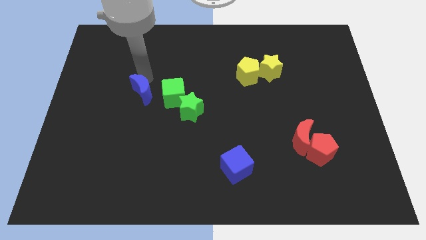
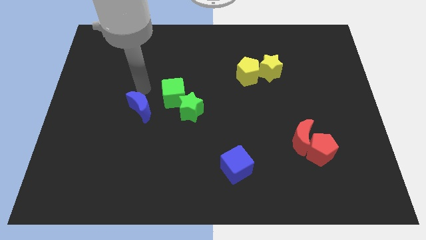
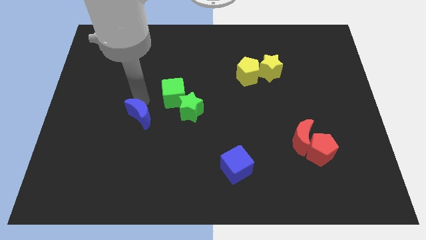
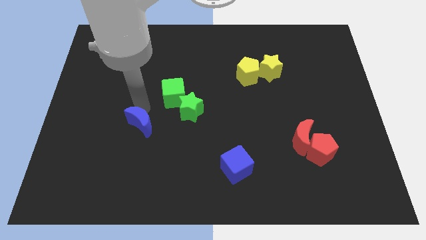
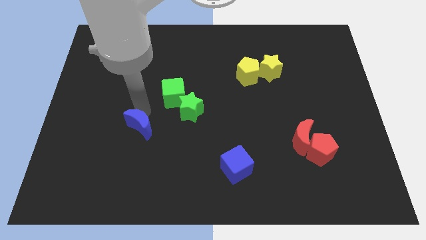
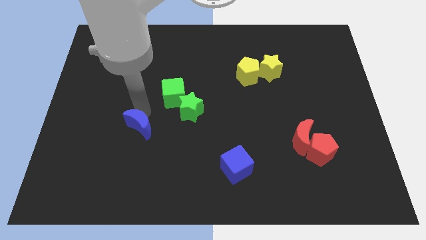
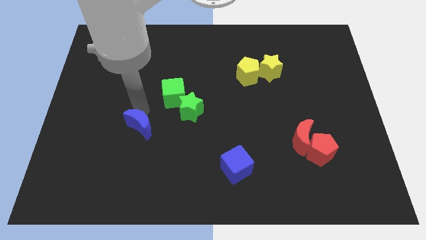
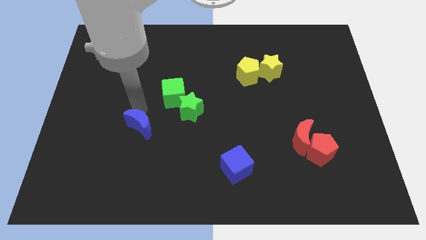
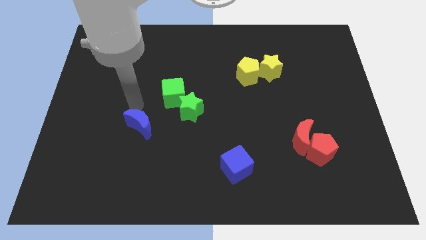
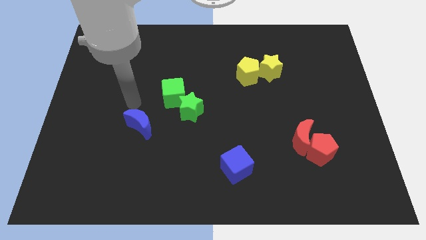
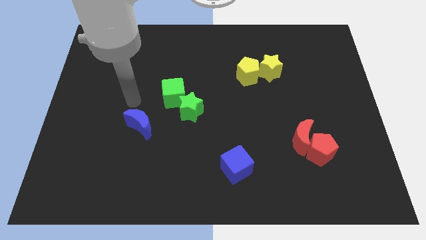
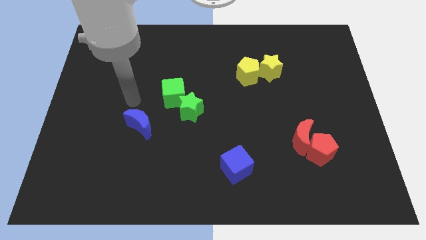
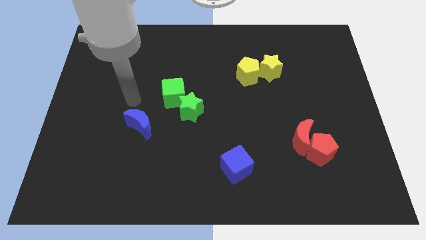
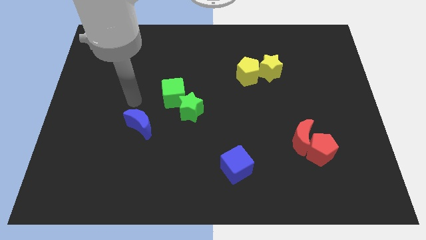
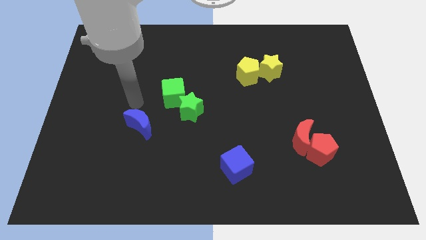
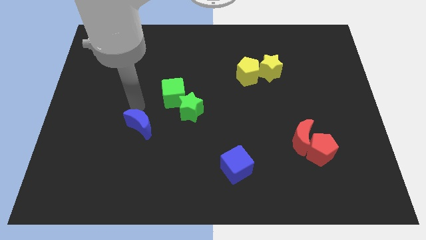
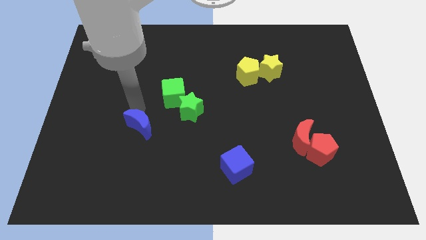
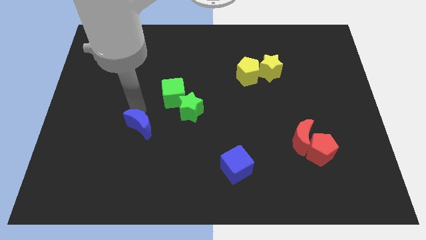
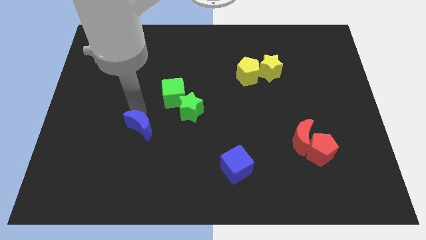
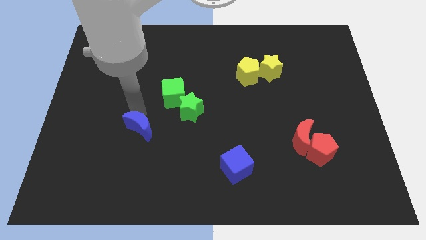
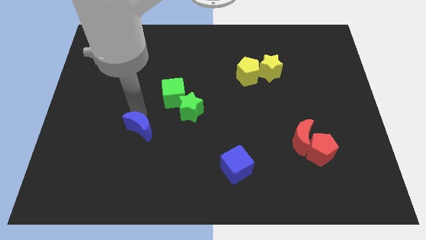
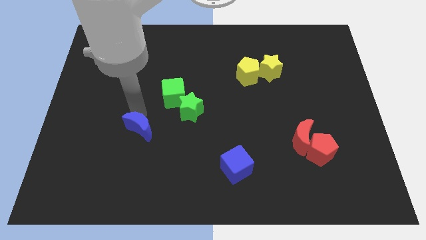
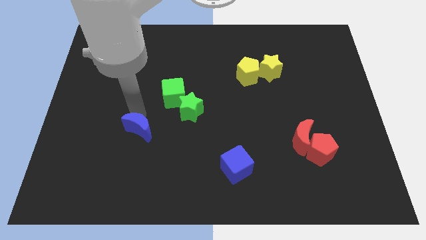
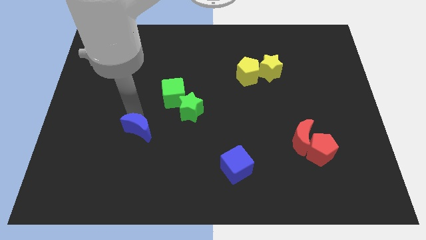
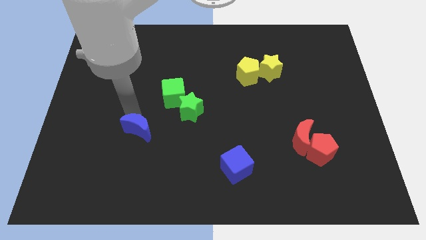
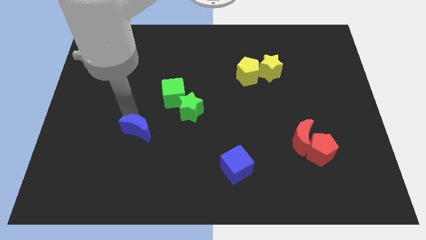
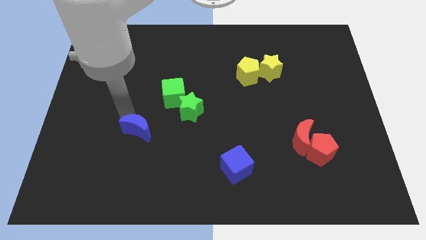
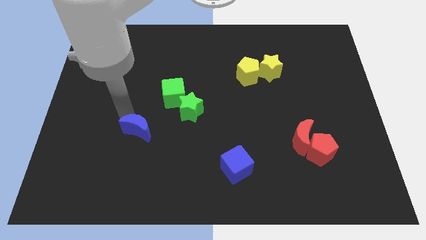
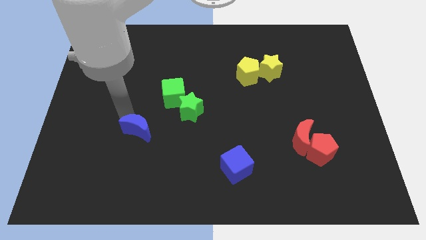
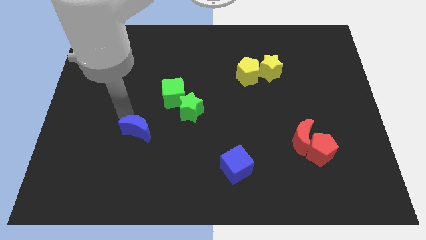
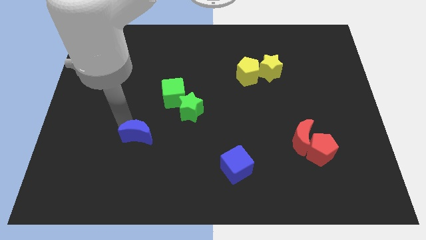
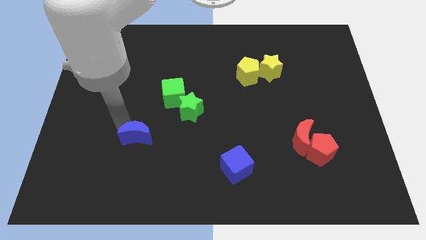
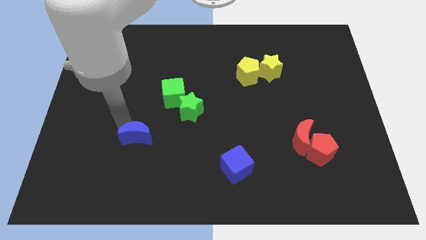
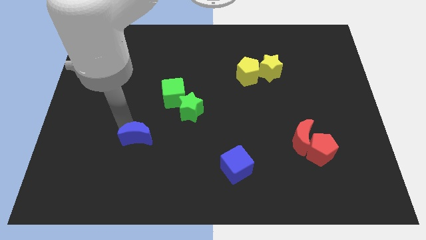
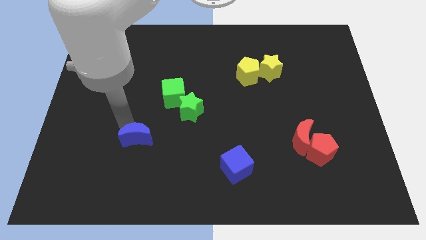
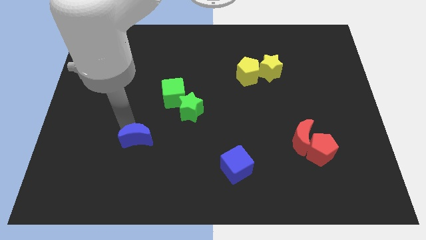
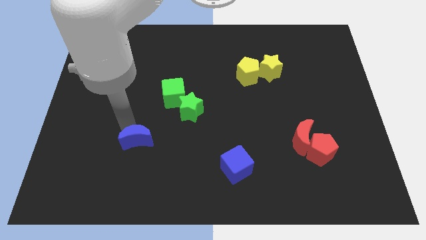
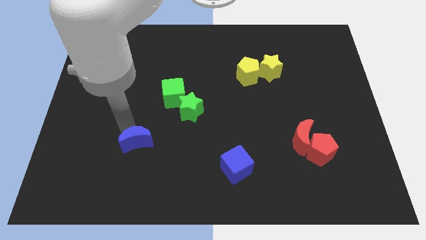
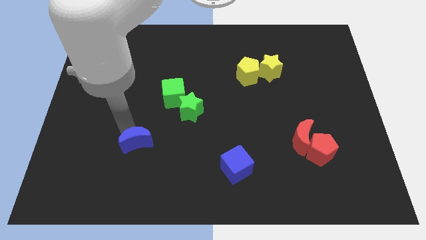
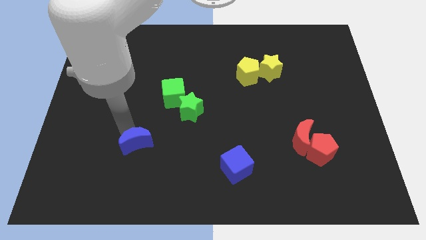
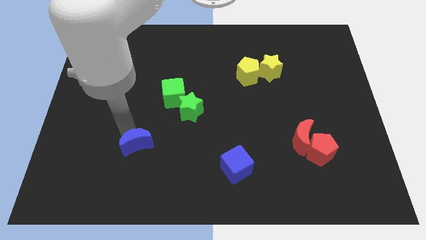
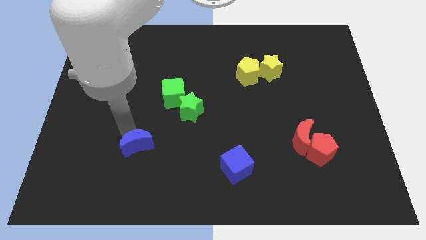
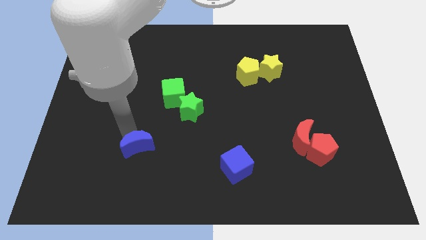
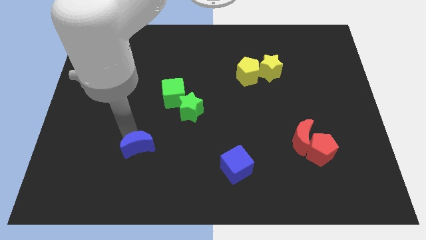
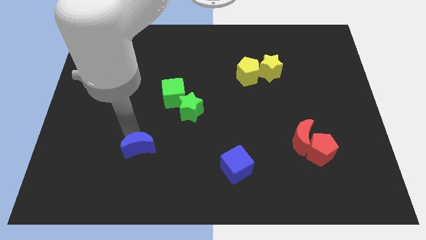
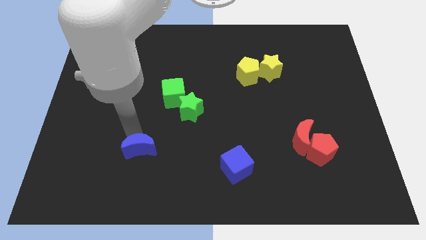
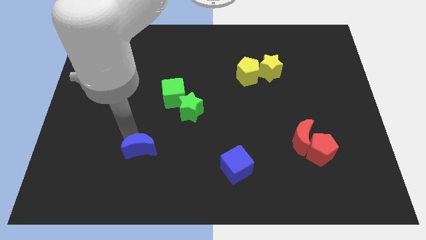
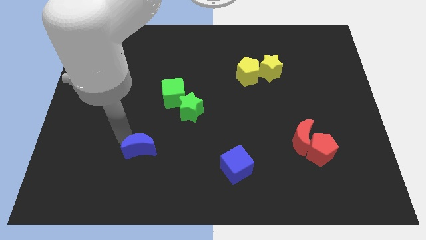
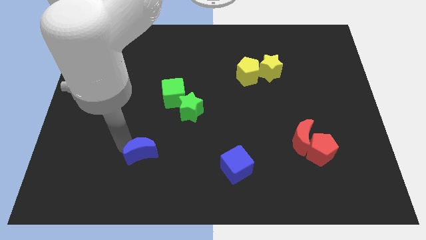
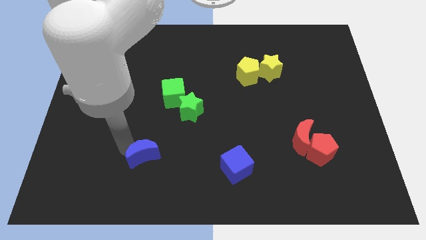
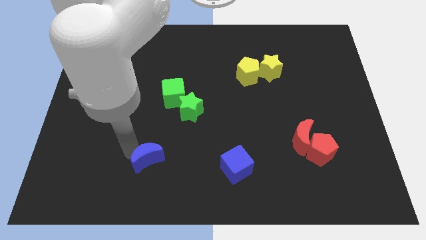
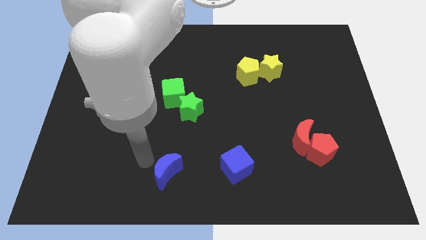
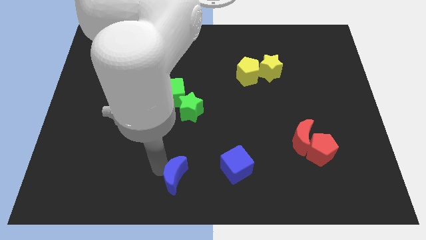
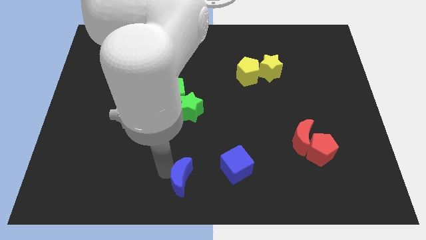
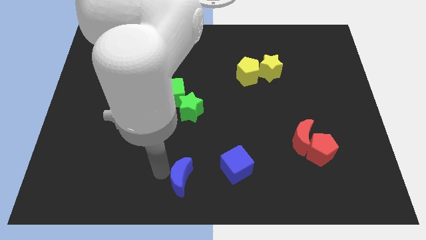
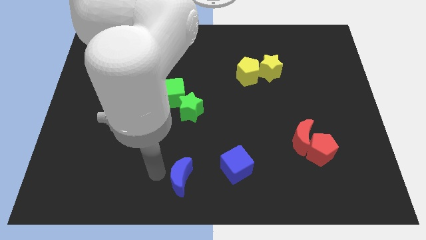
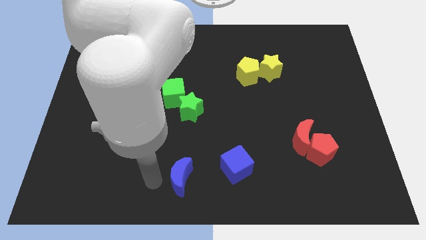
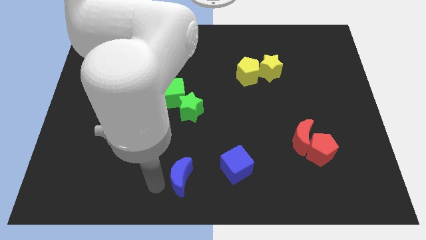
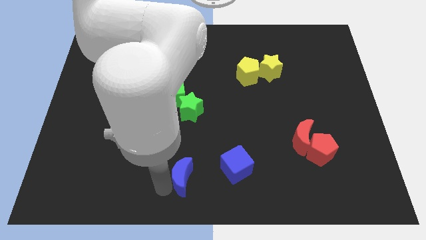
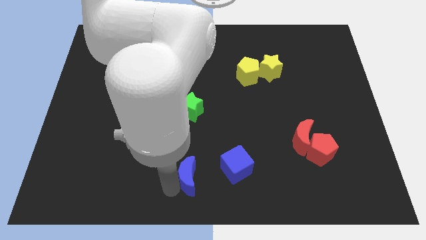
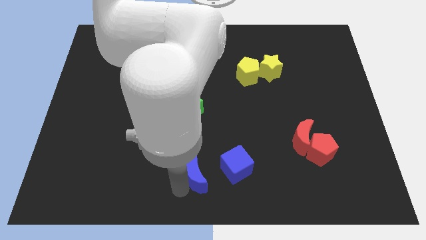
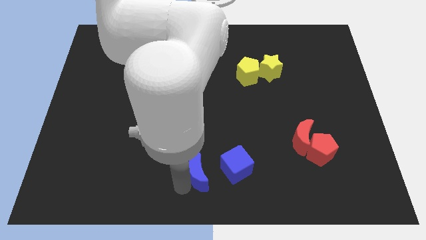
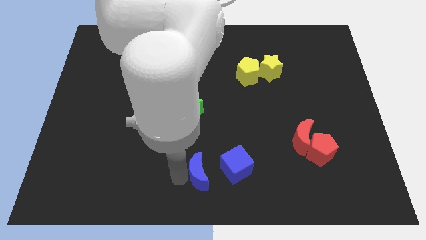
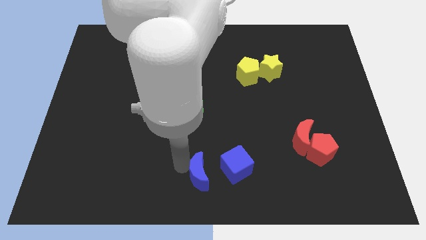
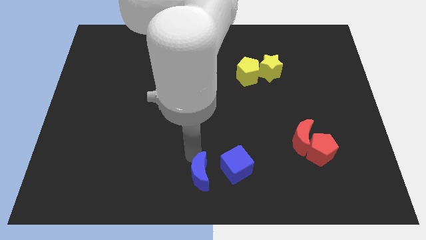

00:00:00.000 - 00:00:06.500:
place the blue crescent left to the blue cube

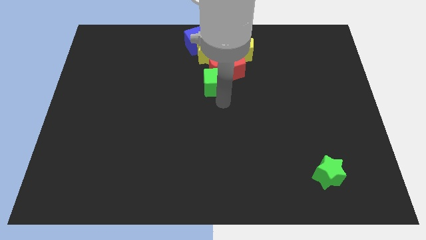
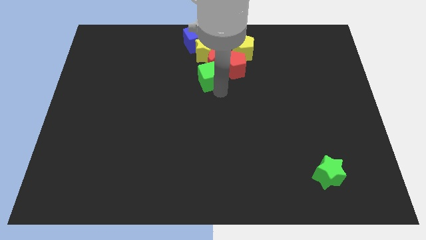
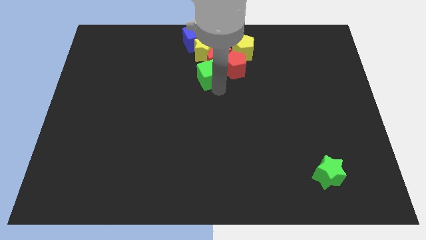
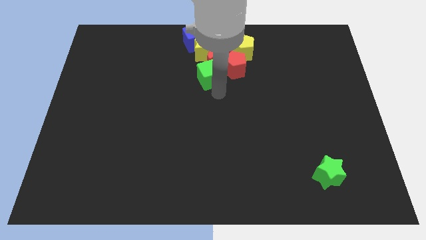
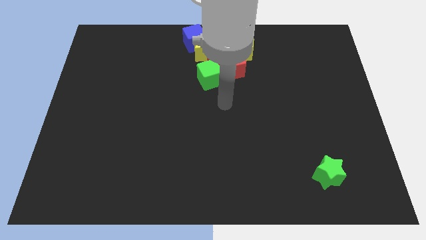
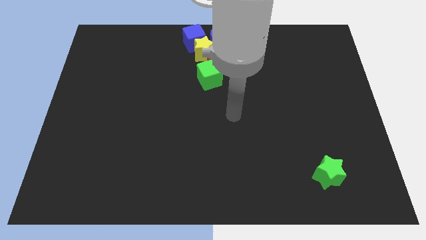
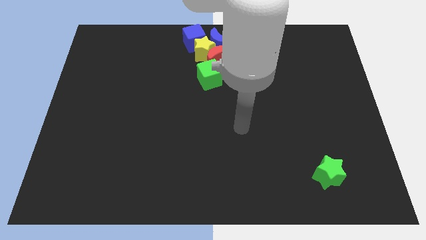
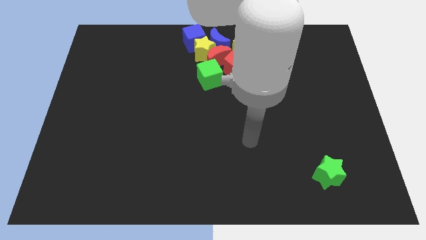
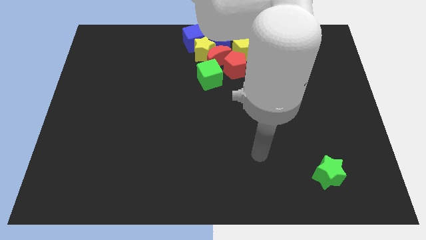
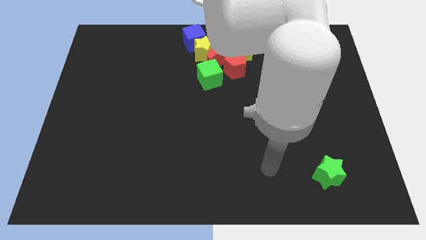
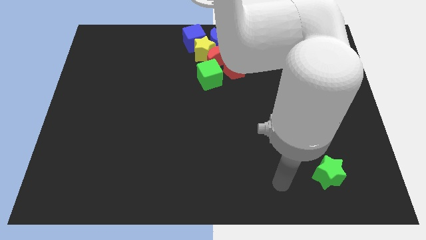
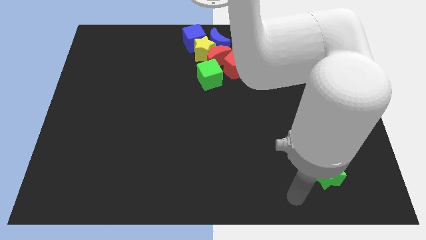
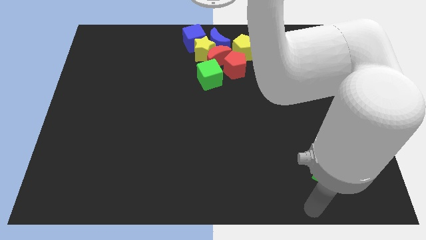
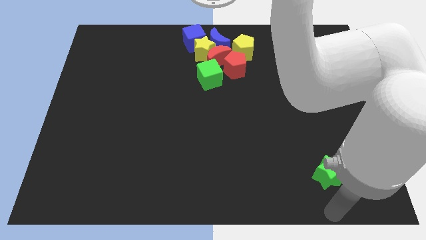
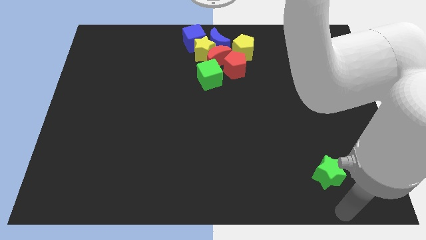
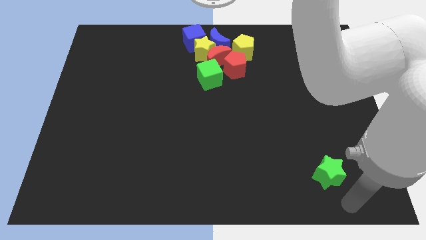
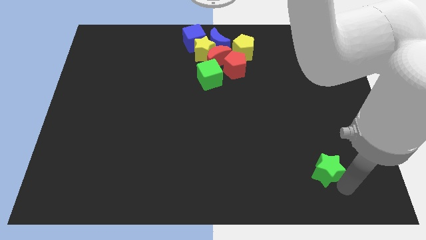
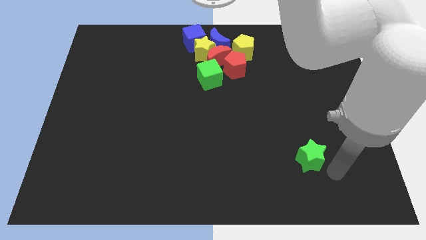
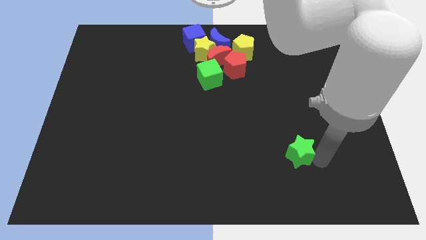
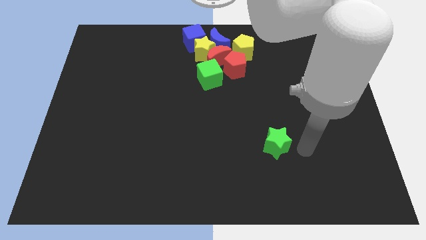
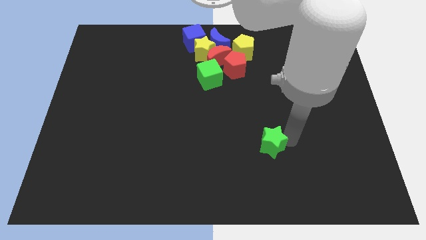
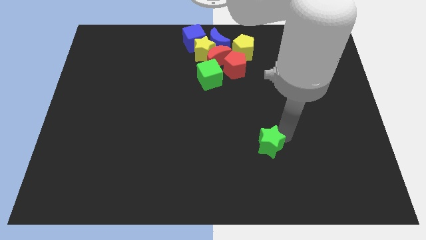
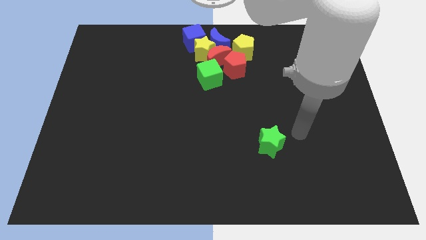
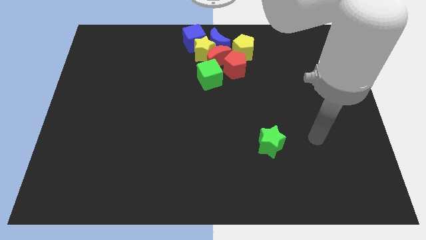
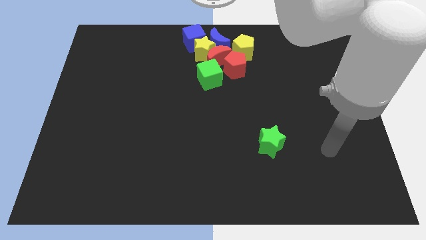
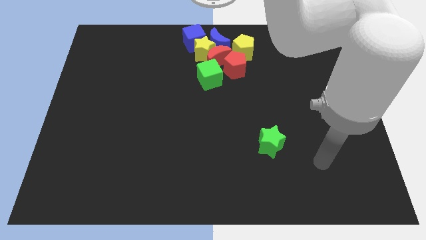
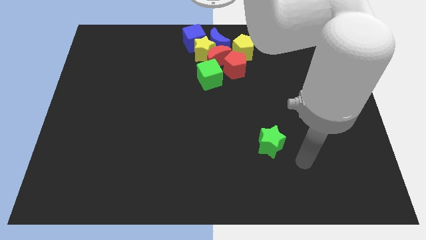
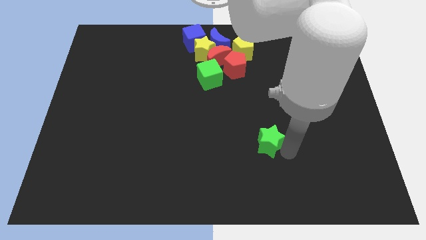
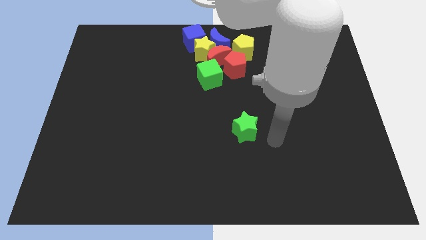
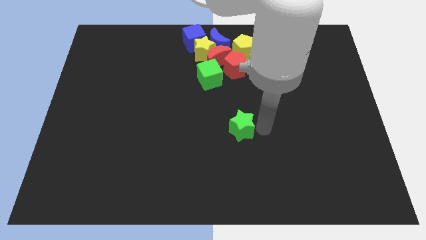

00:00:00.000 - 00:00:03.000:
move the green star to the center of the board
